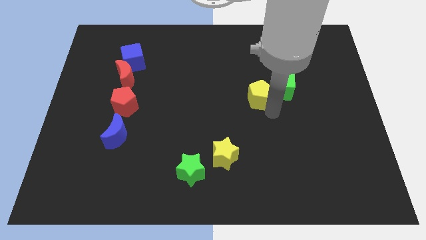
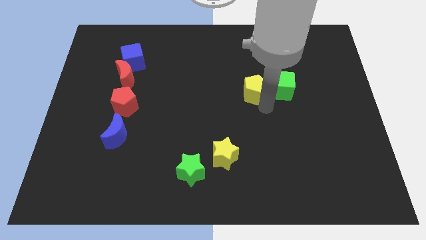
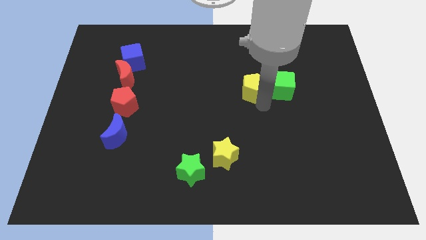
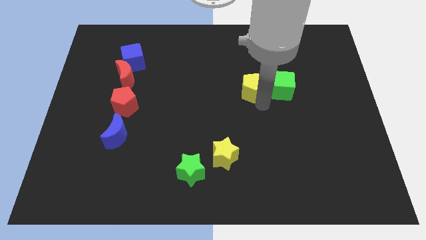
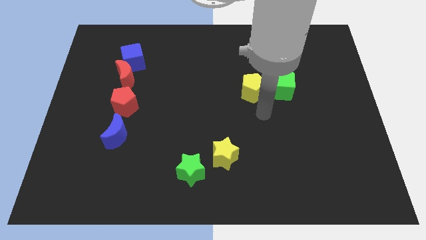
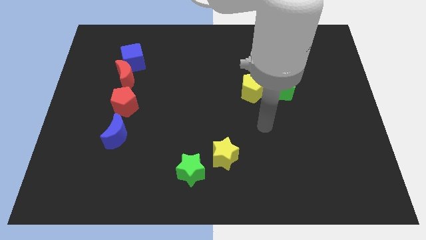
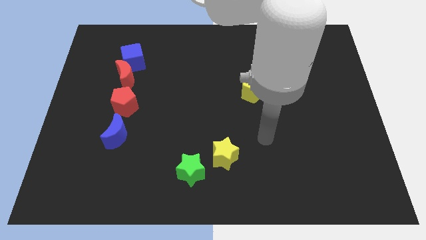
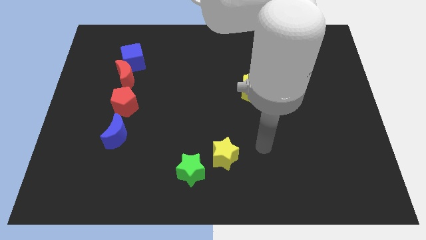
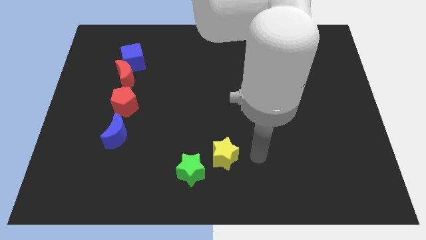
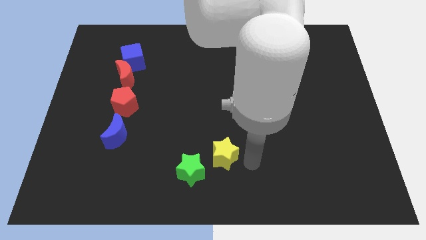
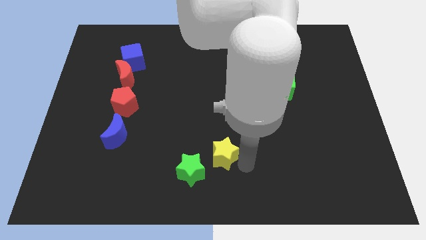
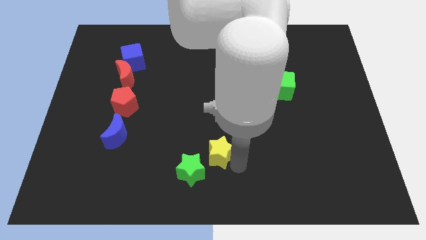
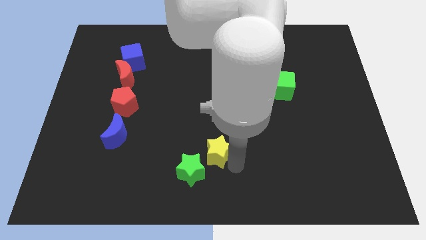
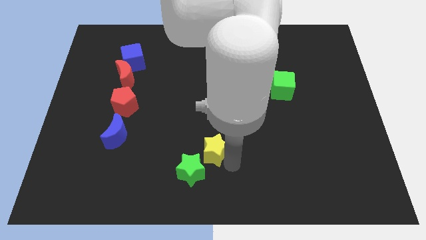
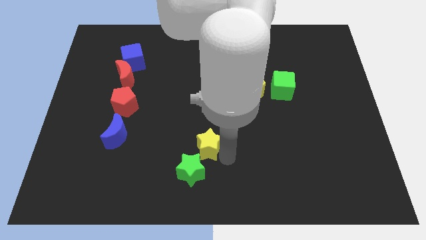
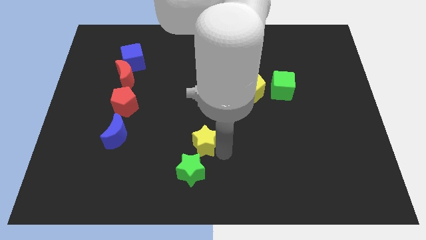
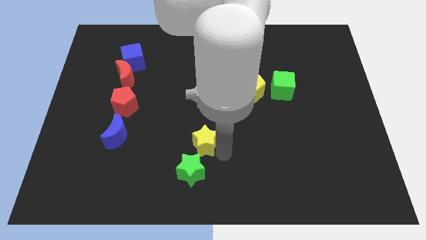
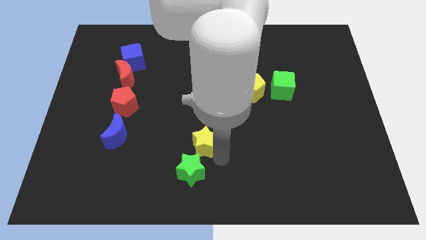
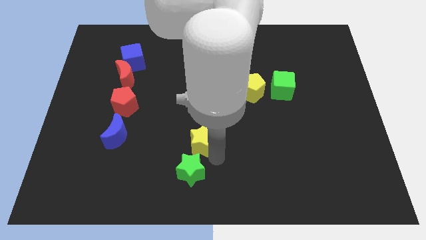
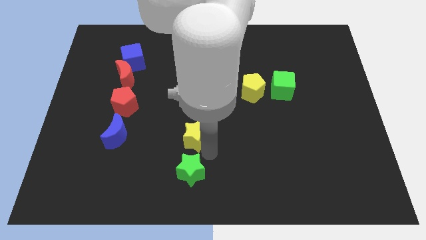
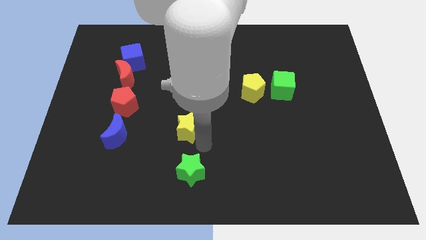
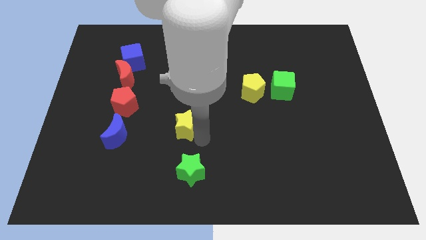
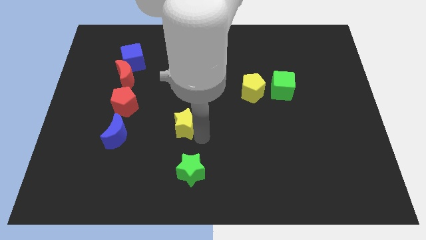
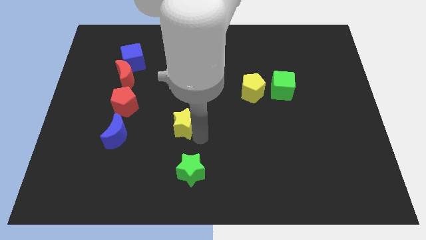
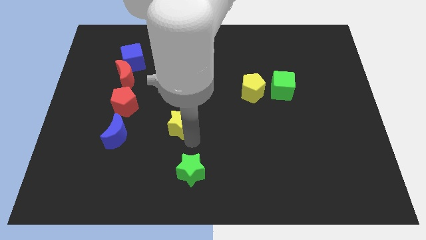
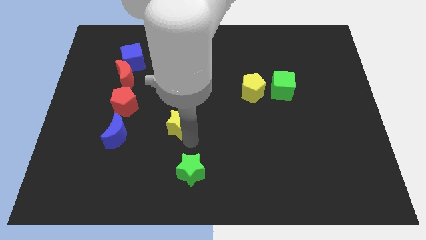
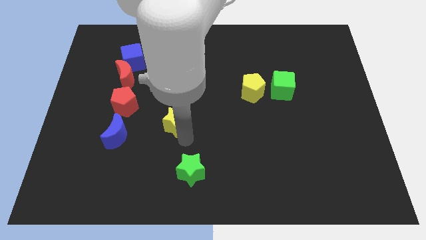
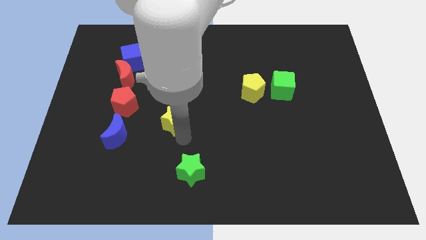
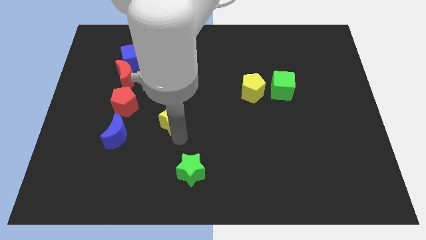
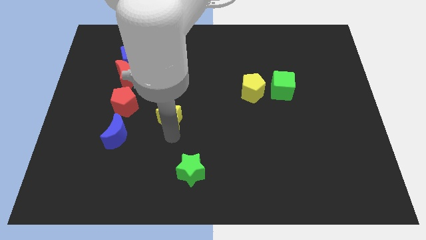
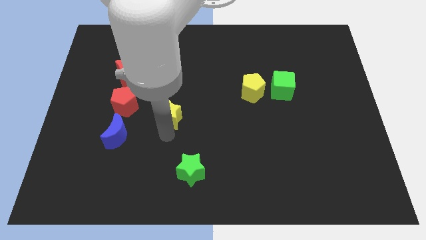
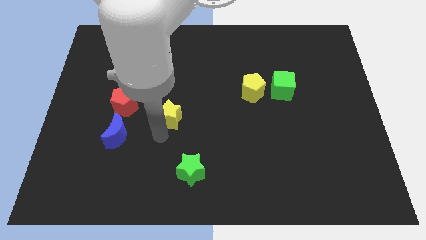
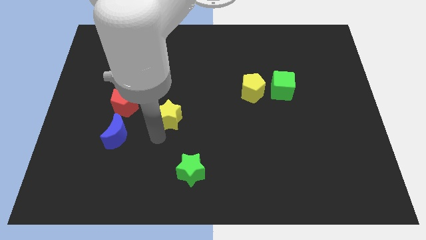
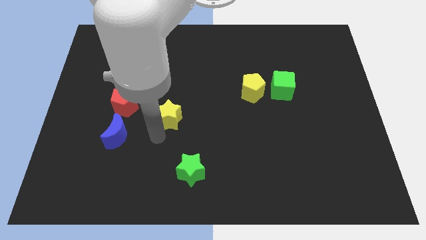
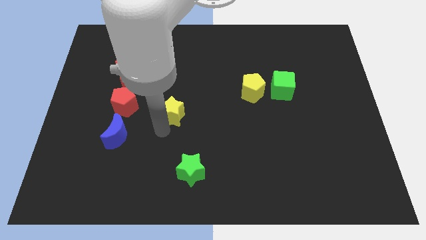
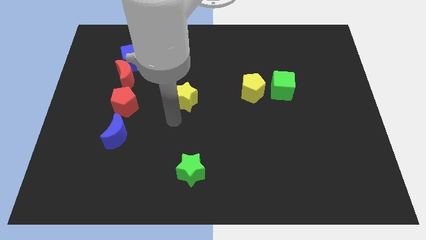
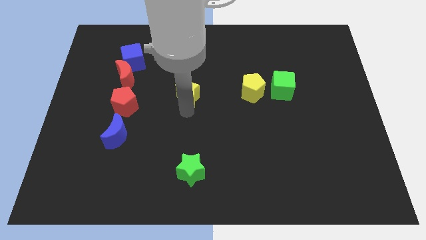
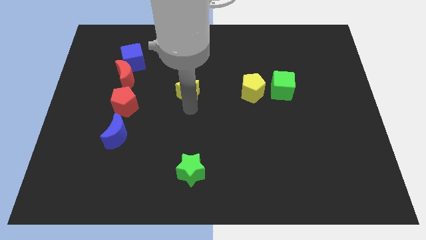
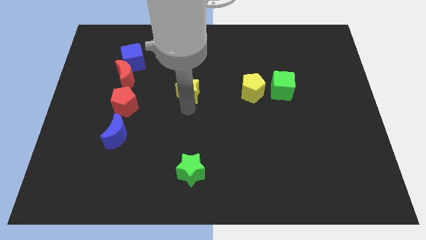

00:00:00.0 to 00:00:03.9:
push the yellow star to the left side of the yellow pentagon

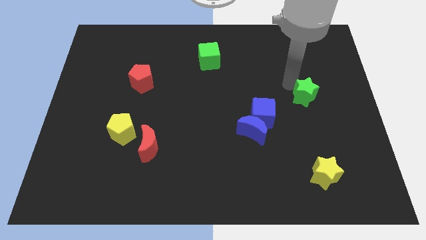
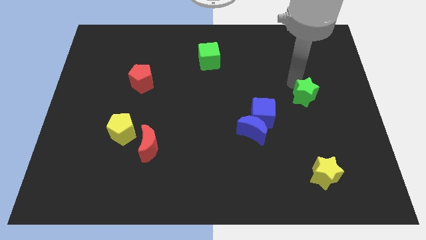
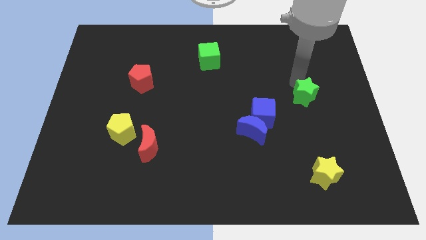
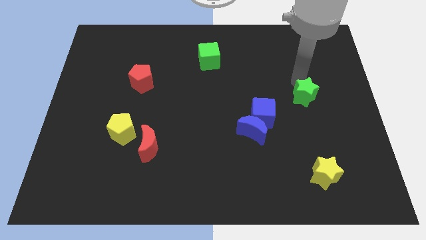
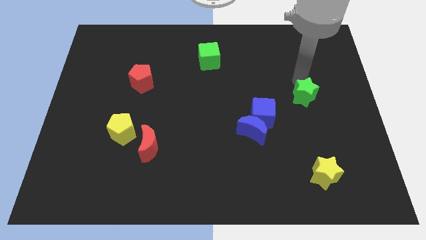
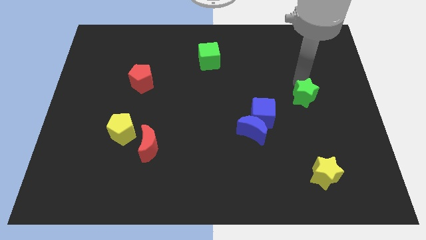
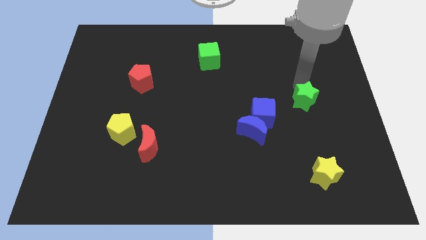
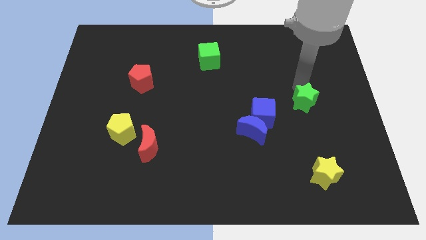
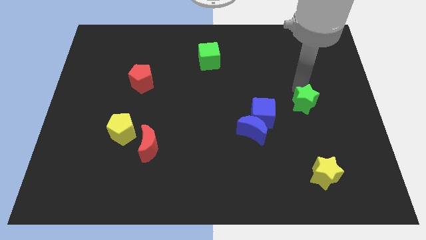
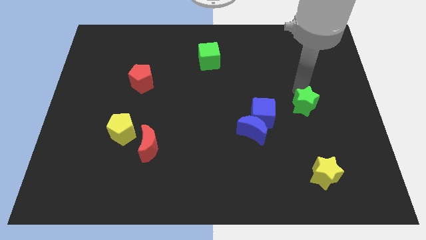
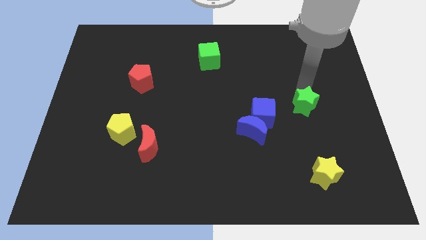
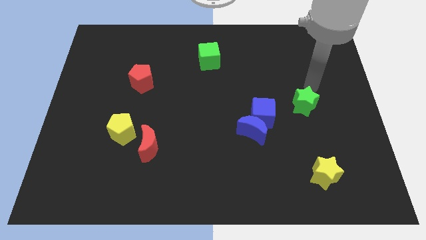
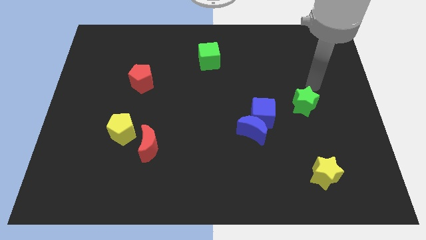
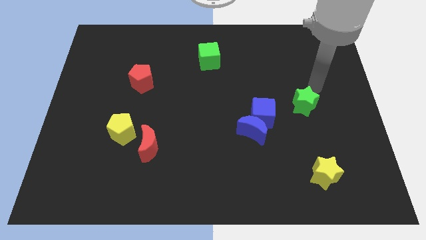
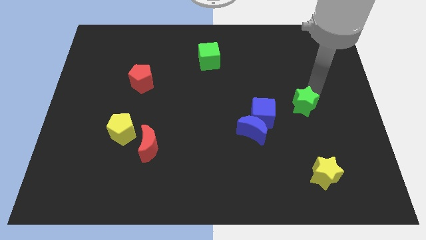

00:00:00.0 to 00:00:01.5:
move the green star towards the bottom of the board

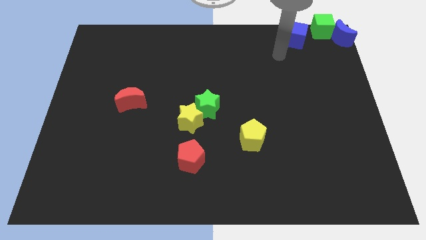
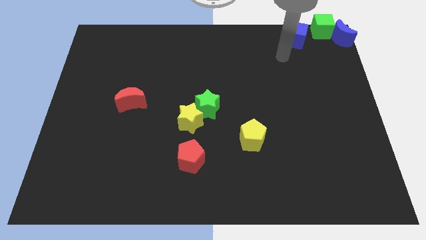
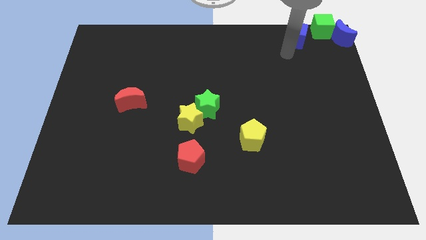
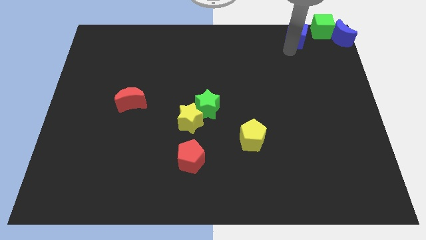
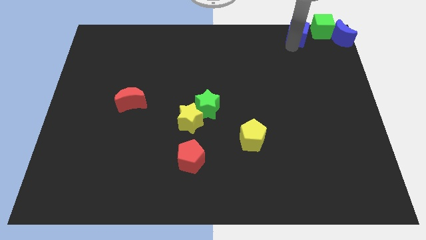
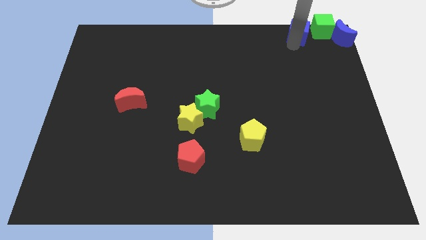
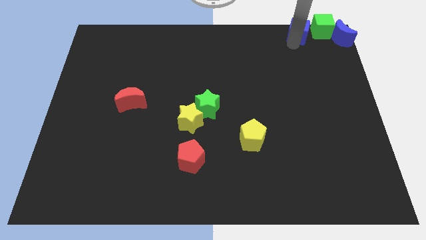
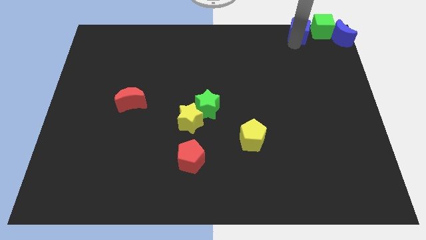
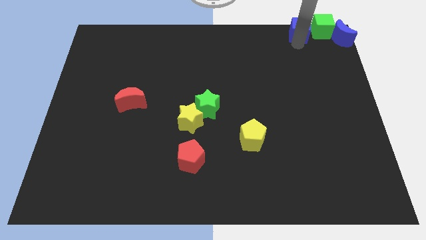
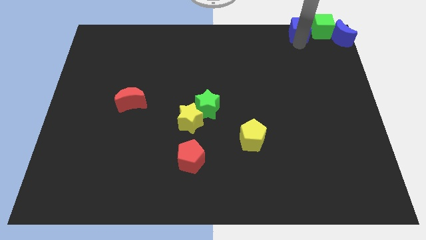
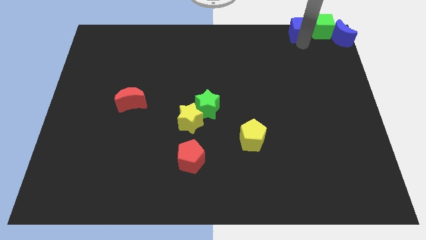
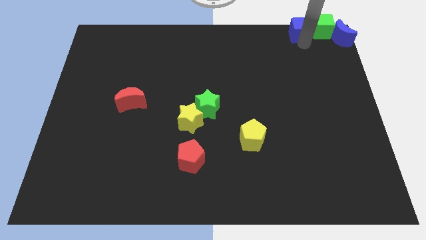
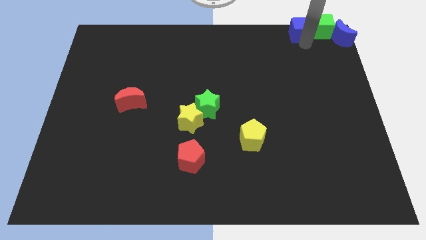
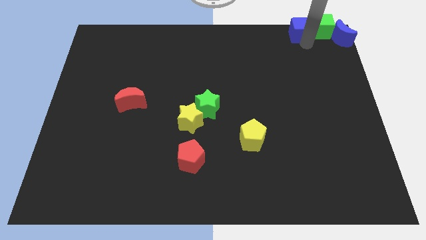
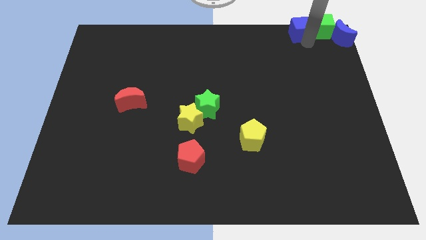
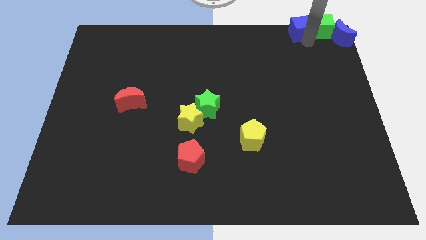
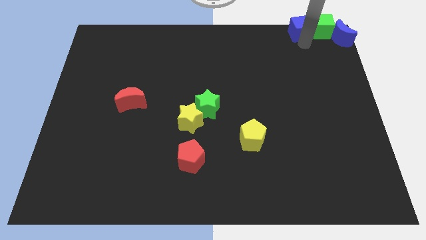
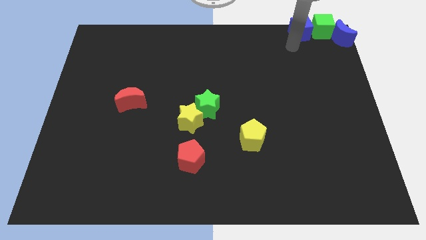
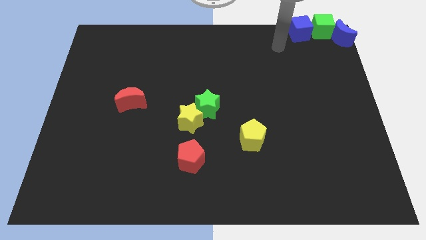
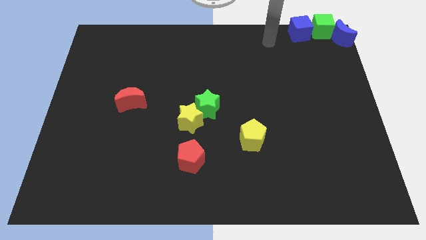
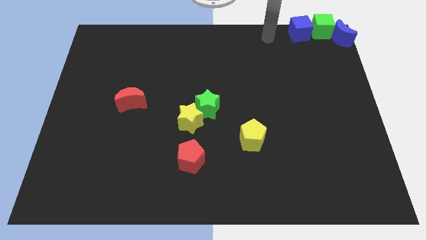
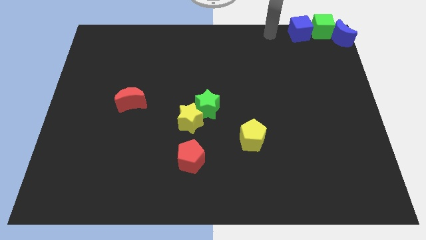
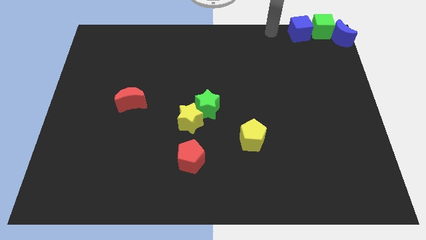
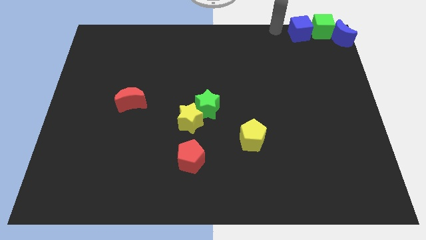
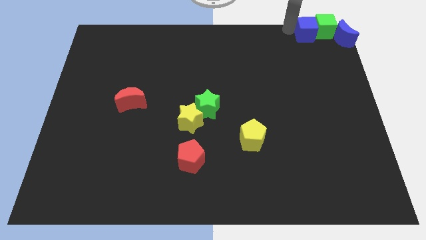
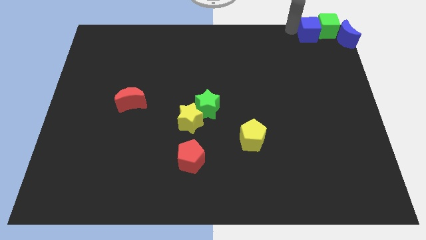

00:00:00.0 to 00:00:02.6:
push the blue cube in the green cube

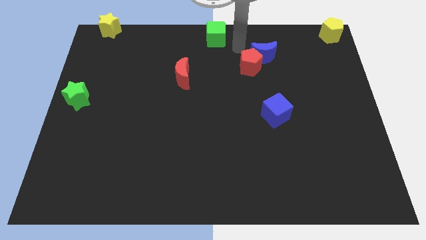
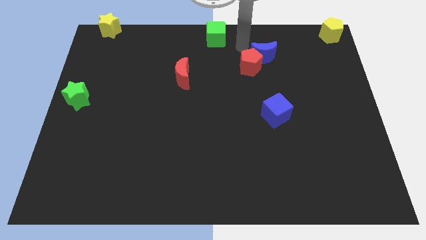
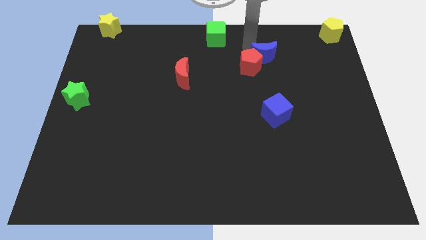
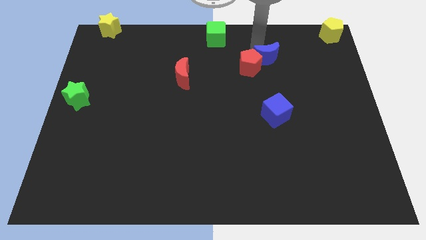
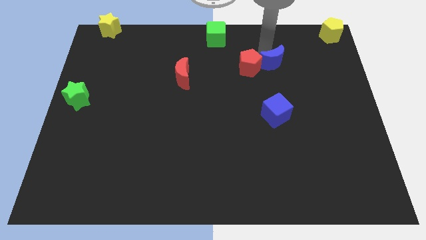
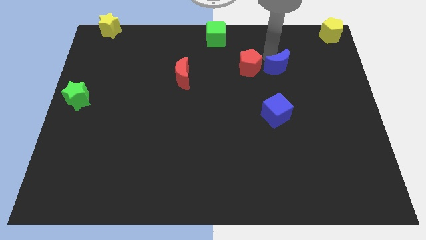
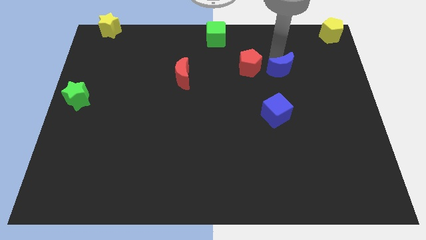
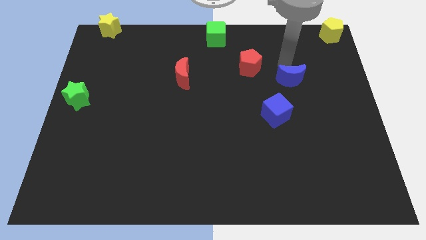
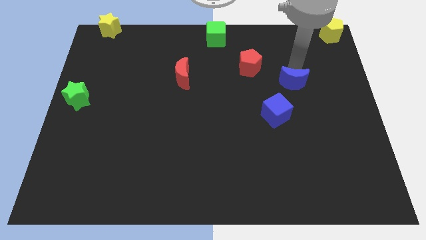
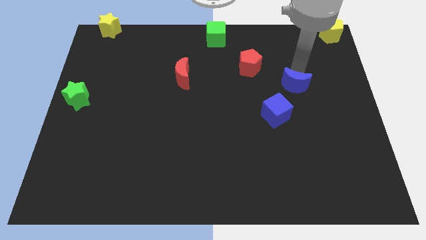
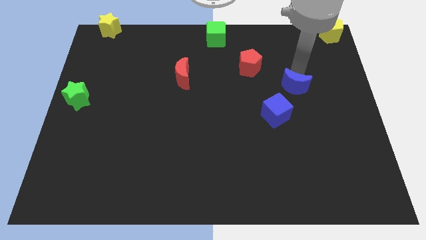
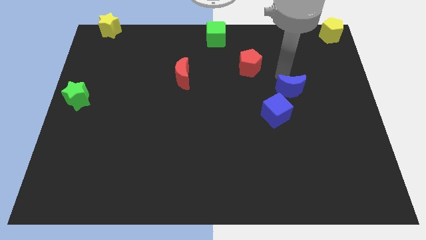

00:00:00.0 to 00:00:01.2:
separate the blue moon from the red pentagon
